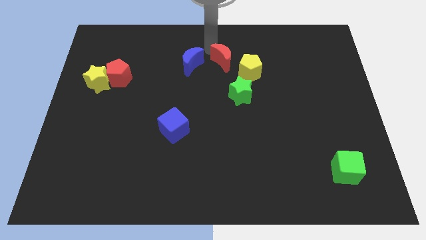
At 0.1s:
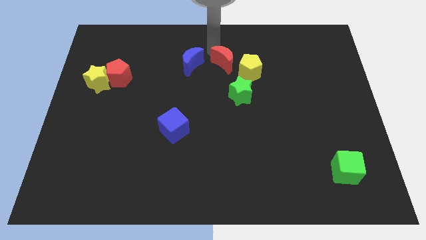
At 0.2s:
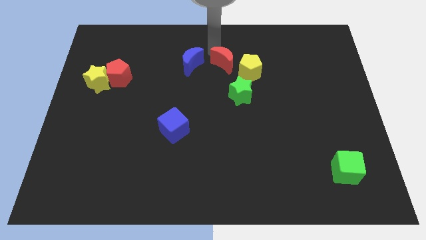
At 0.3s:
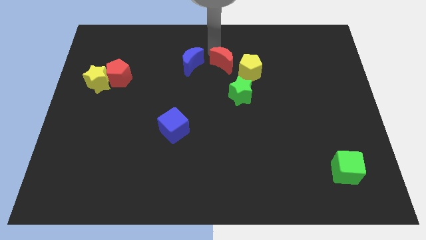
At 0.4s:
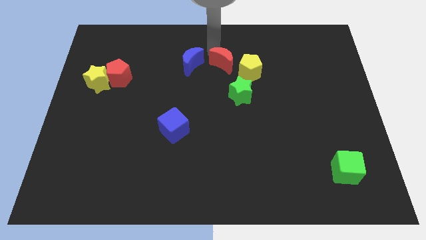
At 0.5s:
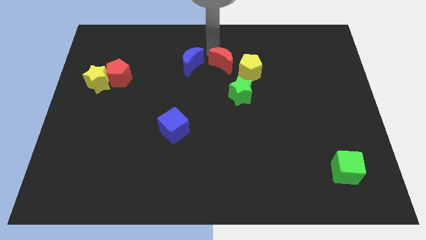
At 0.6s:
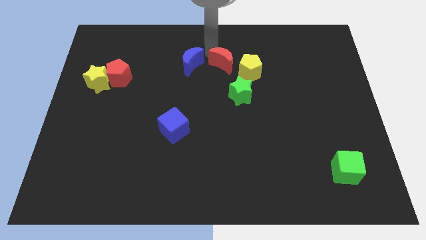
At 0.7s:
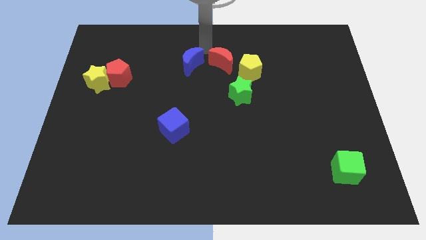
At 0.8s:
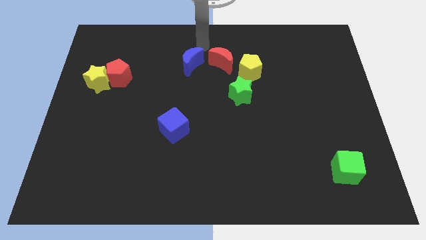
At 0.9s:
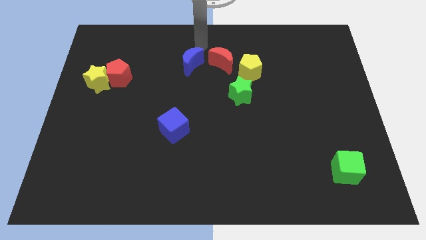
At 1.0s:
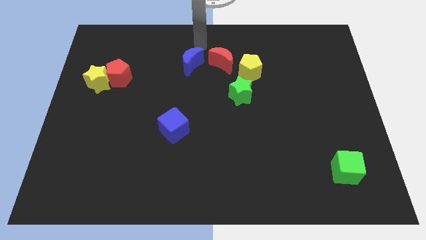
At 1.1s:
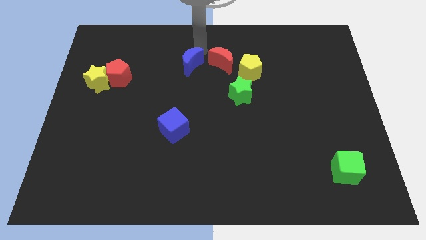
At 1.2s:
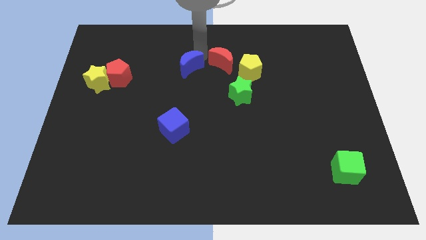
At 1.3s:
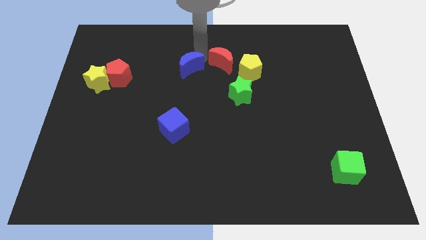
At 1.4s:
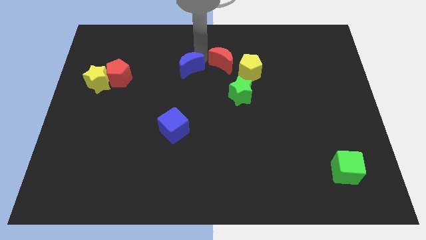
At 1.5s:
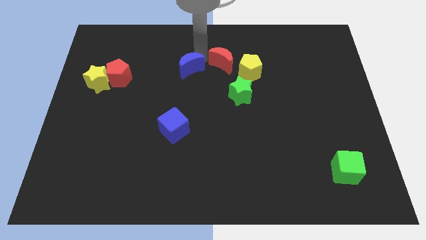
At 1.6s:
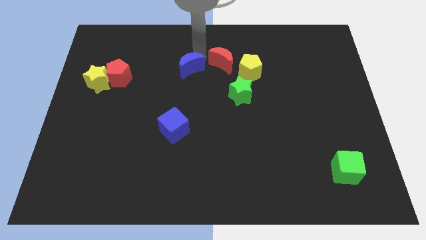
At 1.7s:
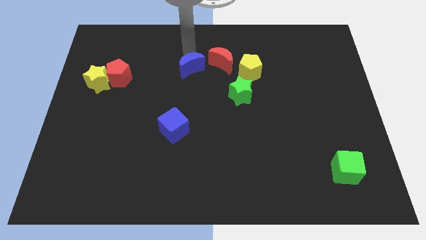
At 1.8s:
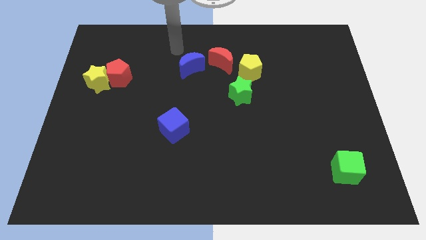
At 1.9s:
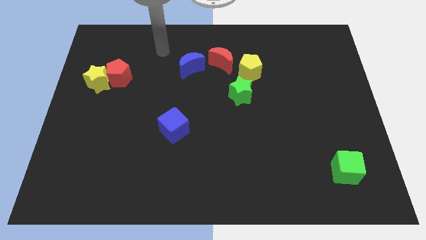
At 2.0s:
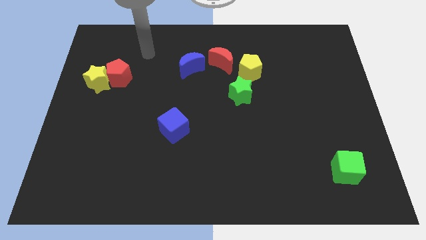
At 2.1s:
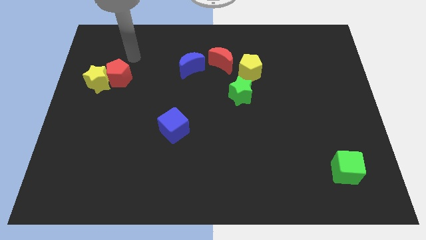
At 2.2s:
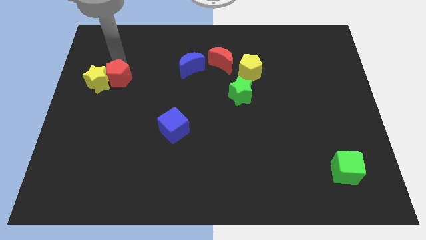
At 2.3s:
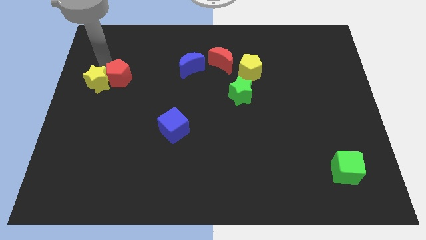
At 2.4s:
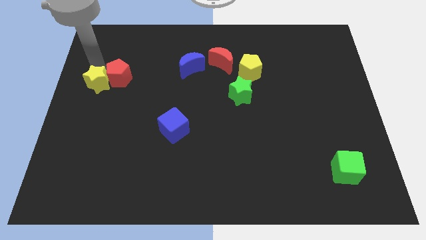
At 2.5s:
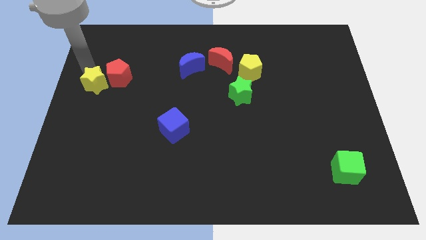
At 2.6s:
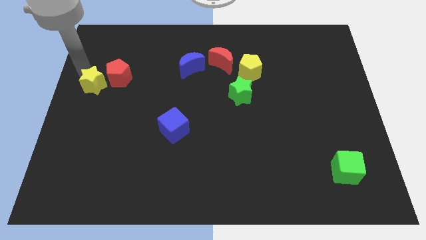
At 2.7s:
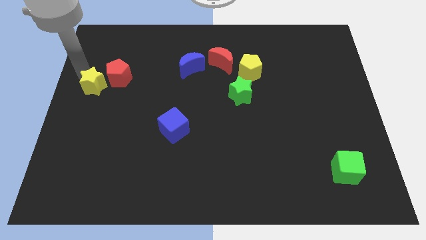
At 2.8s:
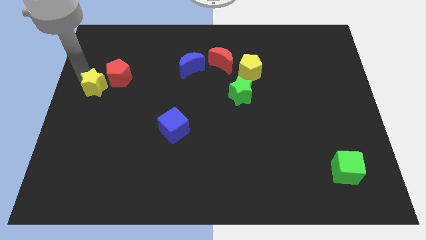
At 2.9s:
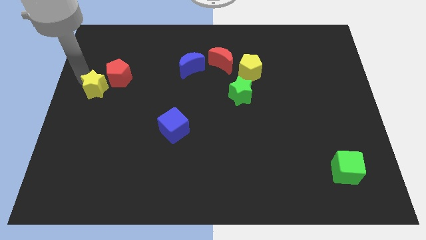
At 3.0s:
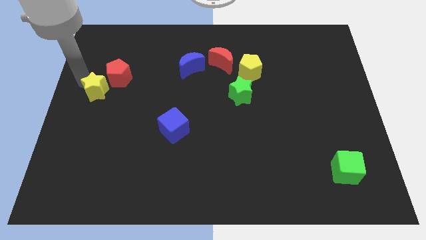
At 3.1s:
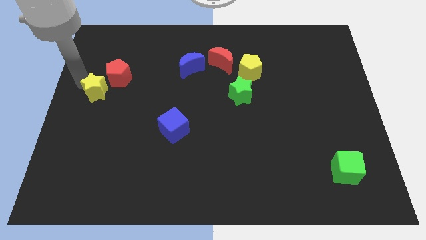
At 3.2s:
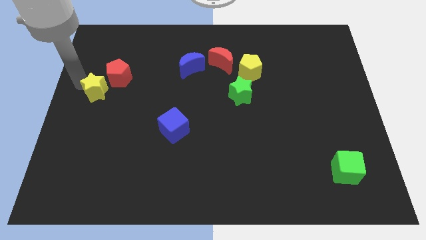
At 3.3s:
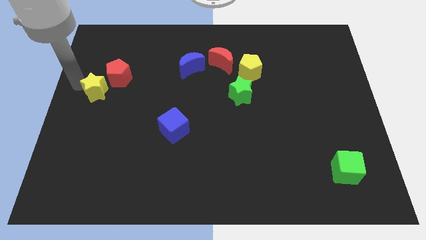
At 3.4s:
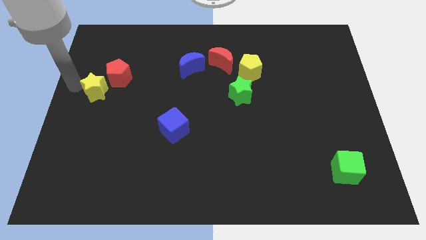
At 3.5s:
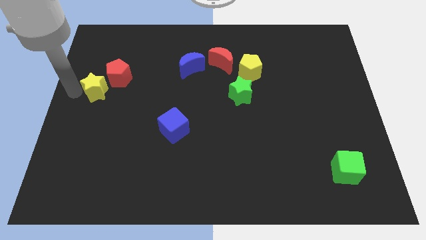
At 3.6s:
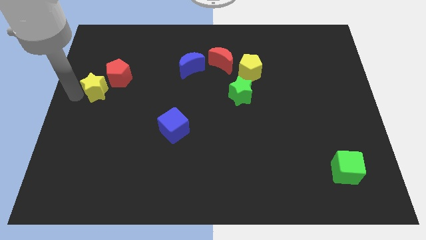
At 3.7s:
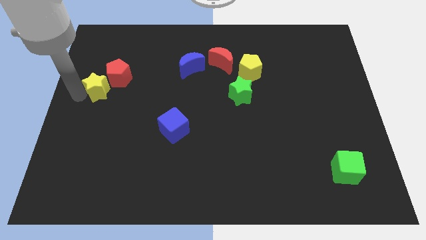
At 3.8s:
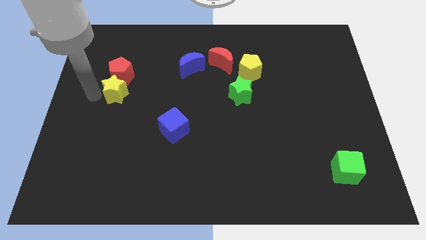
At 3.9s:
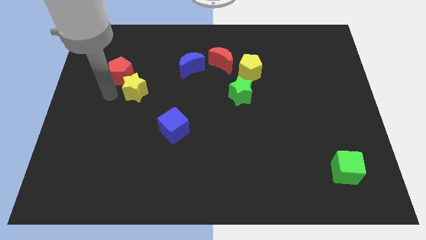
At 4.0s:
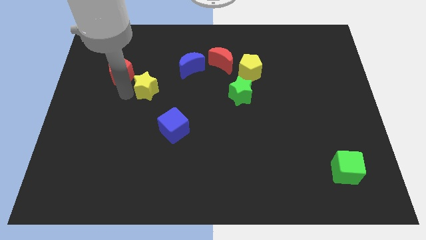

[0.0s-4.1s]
place yellow star below red pentagon

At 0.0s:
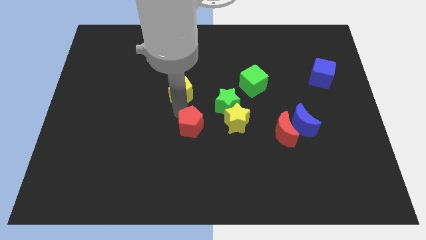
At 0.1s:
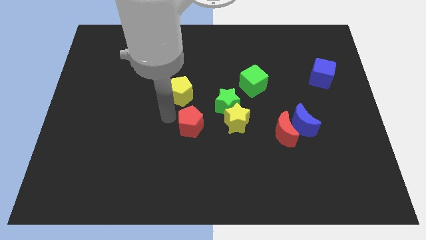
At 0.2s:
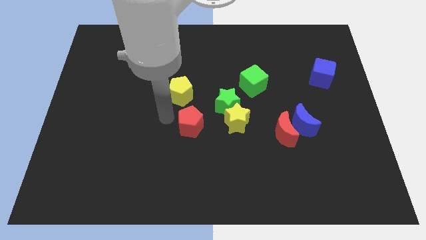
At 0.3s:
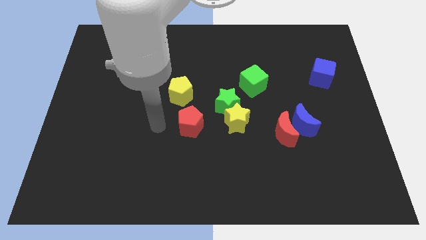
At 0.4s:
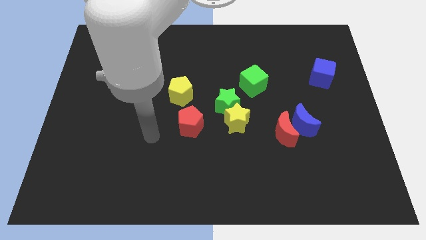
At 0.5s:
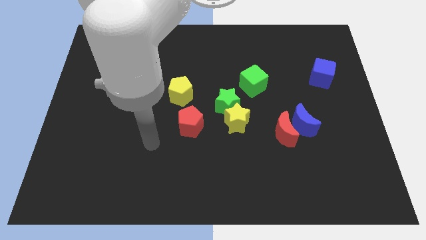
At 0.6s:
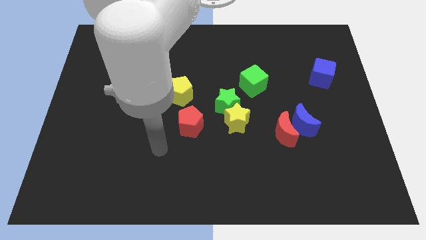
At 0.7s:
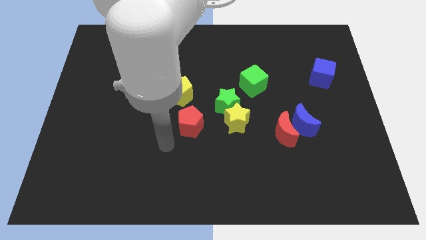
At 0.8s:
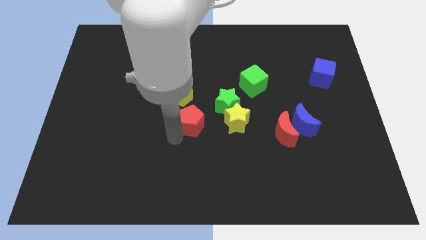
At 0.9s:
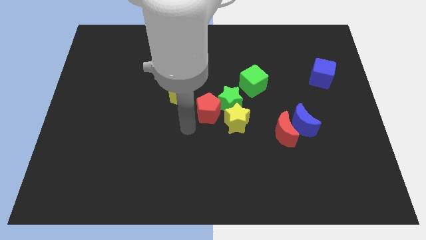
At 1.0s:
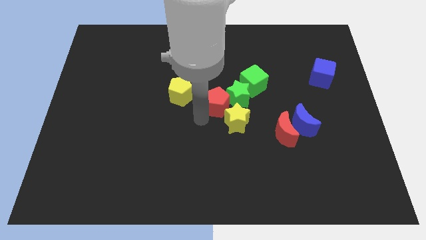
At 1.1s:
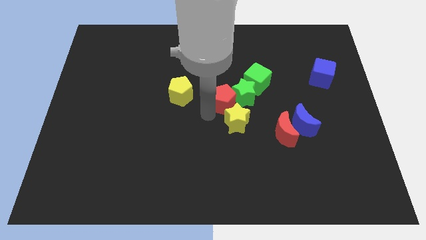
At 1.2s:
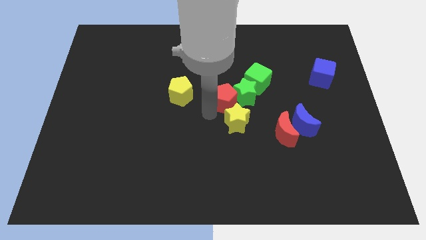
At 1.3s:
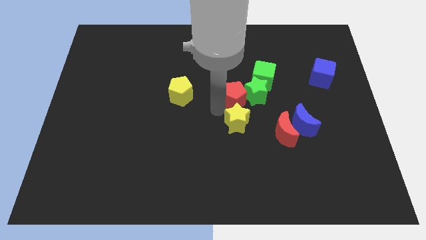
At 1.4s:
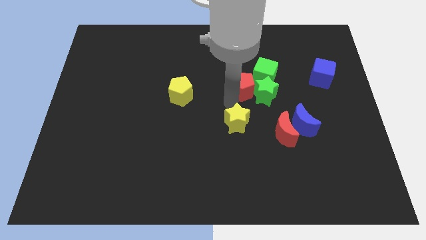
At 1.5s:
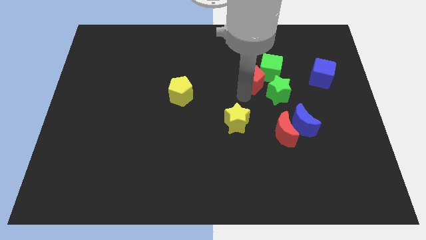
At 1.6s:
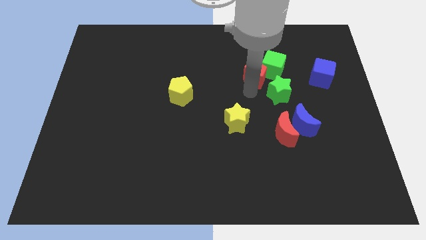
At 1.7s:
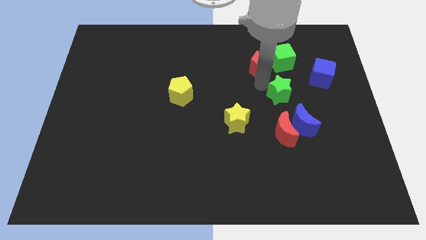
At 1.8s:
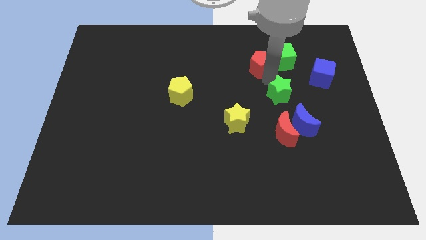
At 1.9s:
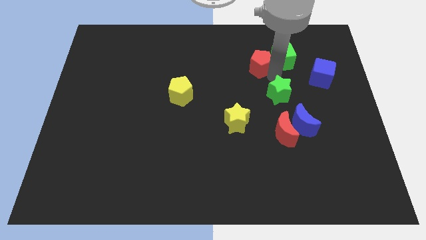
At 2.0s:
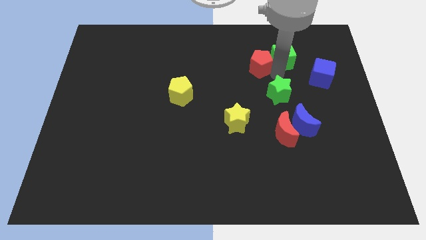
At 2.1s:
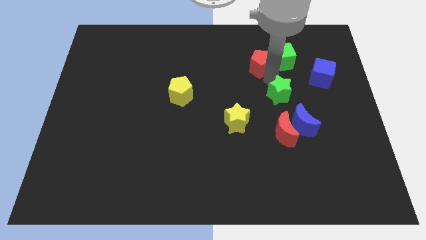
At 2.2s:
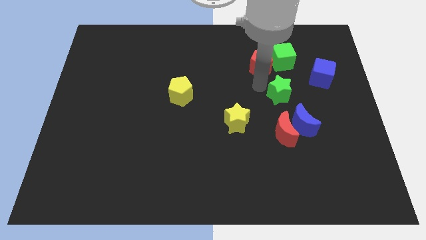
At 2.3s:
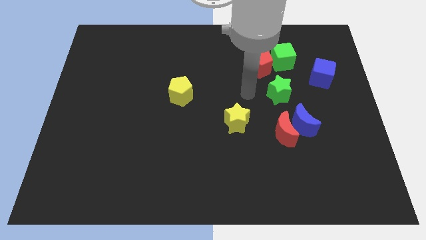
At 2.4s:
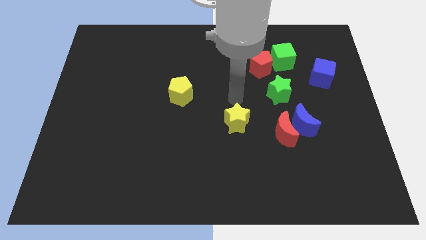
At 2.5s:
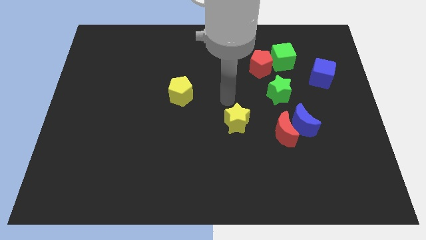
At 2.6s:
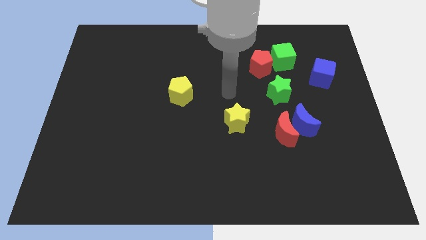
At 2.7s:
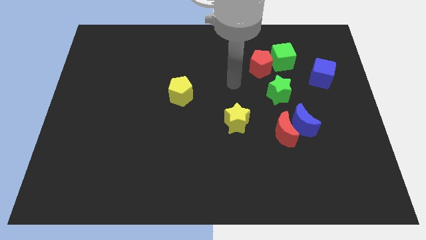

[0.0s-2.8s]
move the red pentagon to the left of the green cube

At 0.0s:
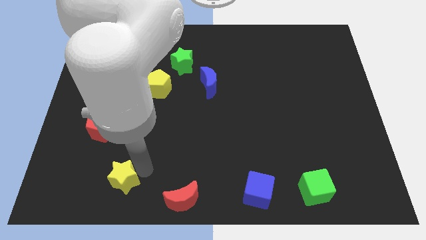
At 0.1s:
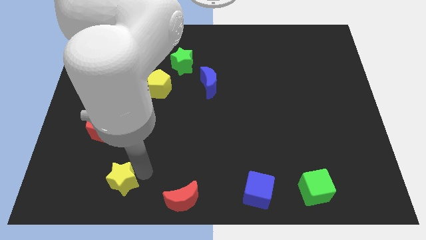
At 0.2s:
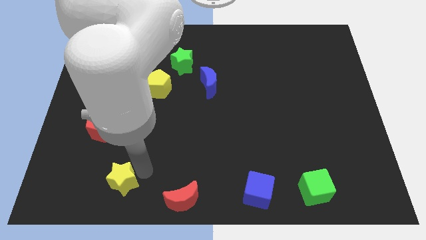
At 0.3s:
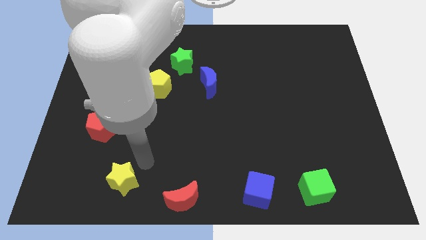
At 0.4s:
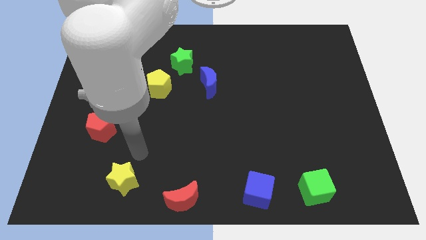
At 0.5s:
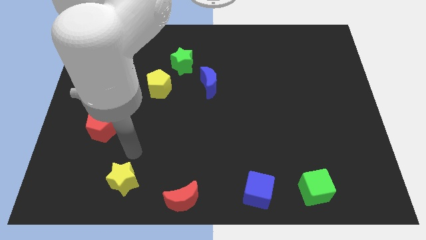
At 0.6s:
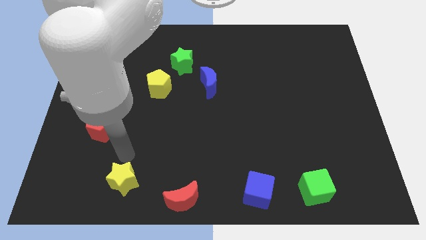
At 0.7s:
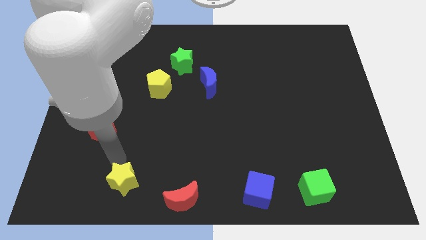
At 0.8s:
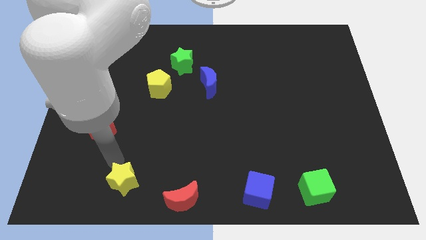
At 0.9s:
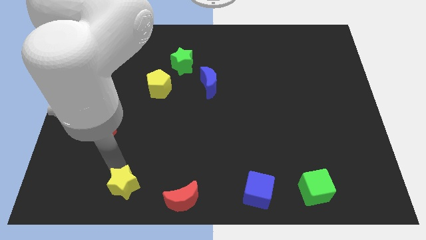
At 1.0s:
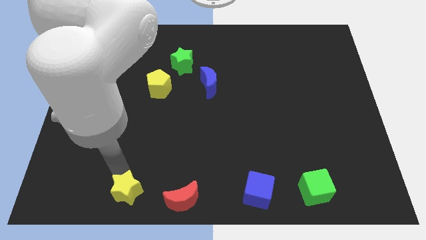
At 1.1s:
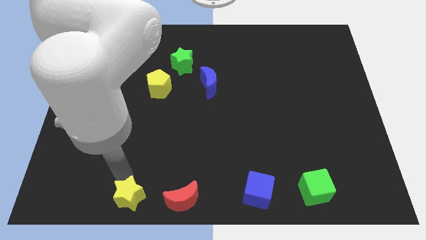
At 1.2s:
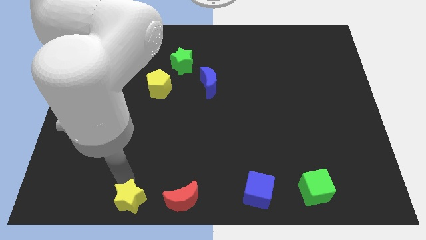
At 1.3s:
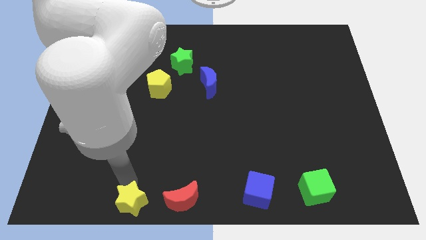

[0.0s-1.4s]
place the yellow star to the left side of red crescent

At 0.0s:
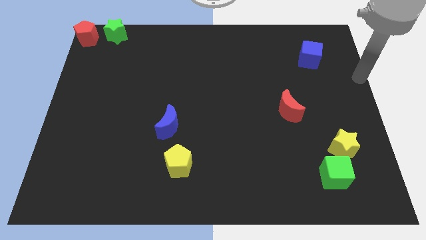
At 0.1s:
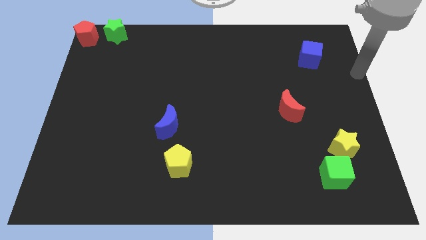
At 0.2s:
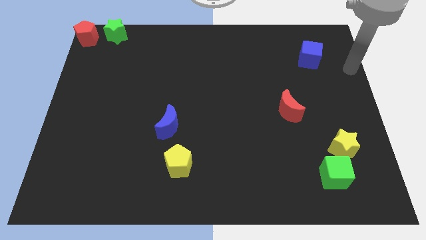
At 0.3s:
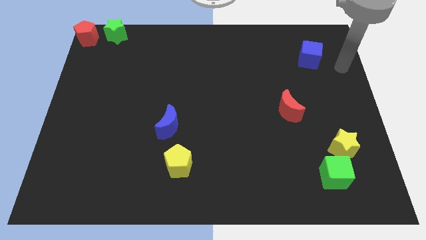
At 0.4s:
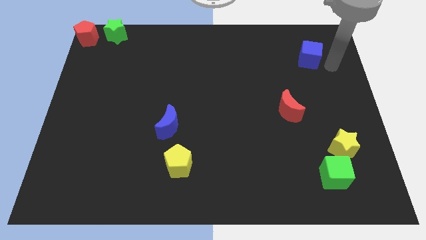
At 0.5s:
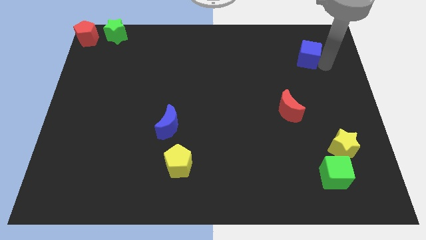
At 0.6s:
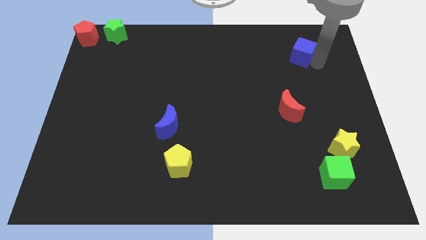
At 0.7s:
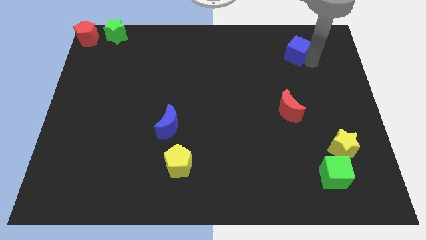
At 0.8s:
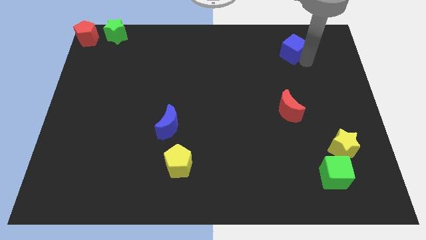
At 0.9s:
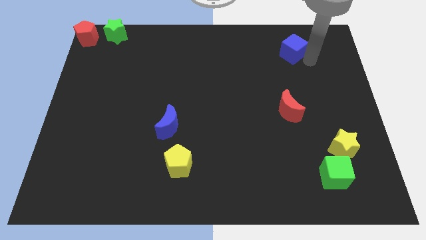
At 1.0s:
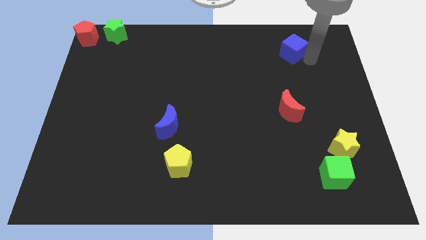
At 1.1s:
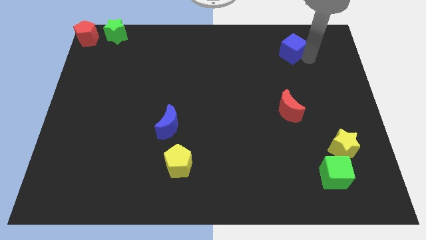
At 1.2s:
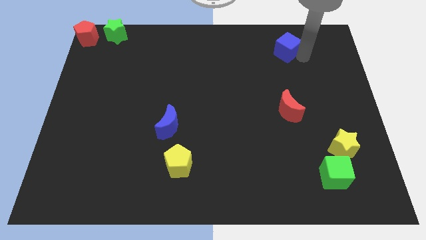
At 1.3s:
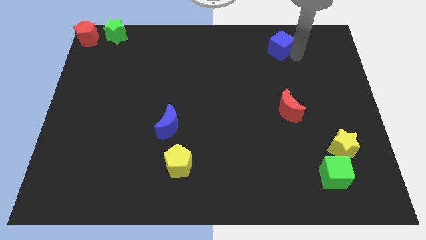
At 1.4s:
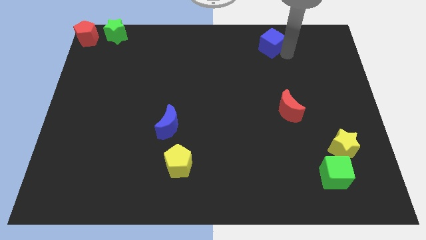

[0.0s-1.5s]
push the blue cube towards the top side of the board
